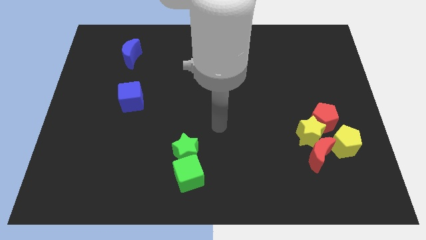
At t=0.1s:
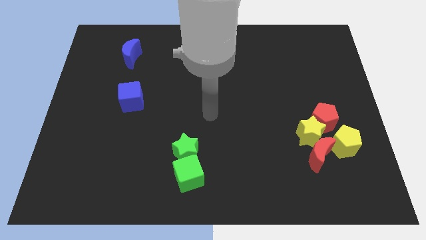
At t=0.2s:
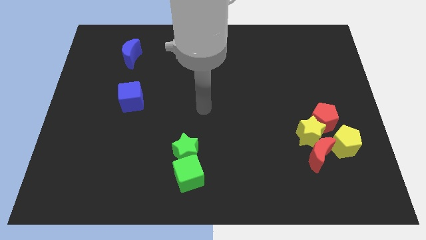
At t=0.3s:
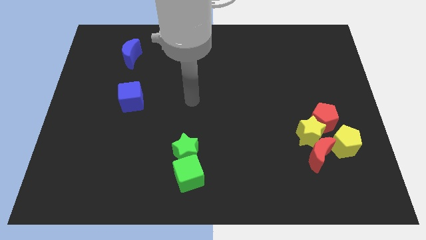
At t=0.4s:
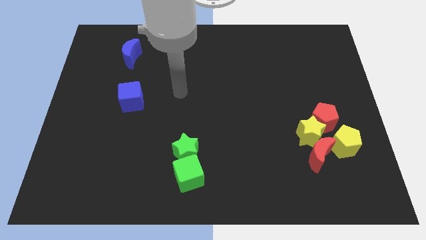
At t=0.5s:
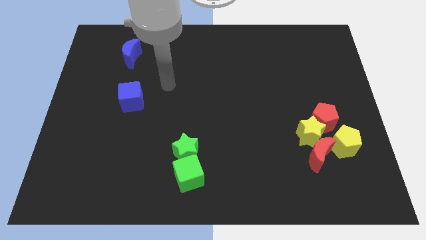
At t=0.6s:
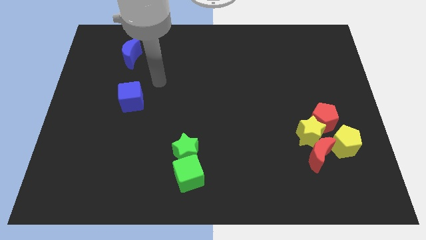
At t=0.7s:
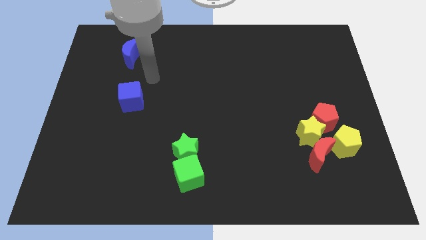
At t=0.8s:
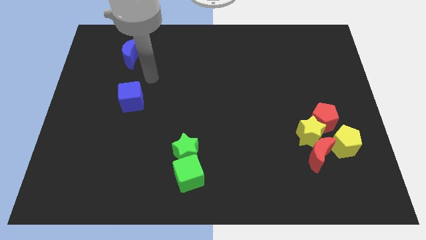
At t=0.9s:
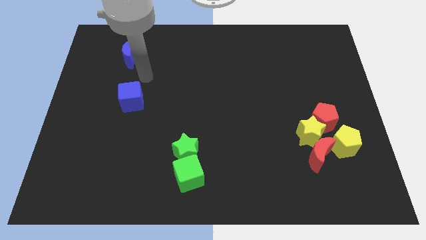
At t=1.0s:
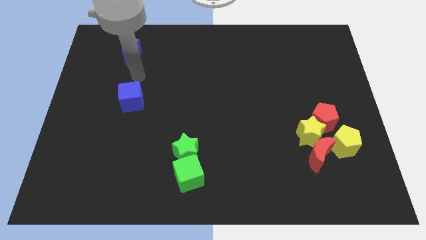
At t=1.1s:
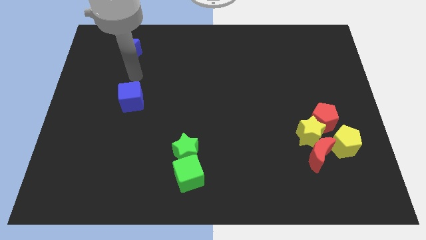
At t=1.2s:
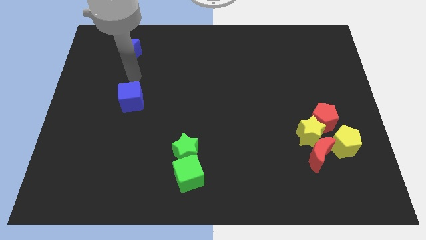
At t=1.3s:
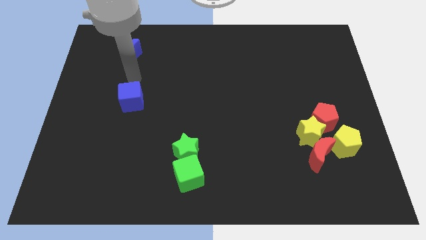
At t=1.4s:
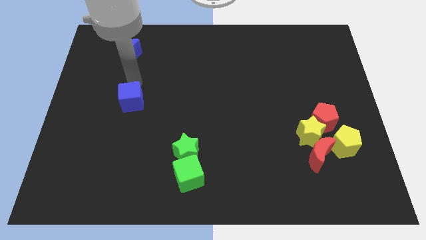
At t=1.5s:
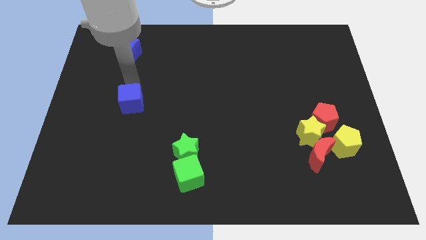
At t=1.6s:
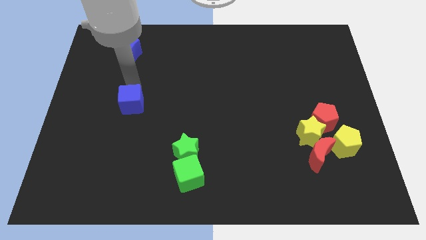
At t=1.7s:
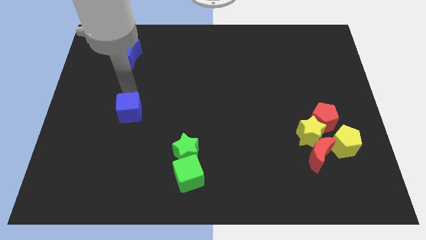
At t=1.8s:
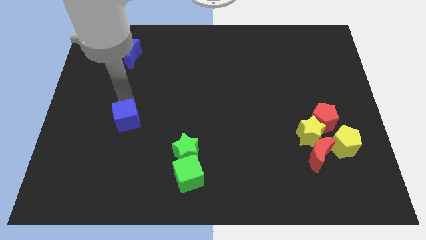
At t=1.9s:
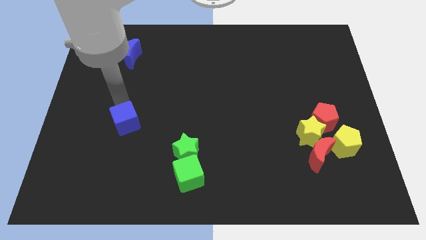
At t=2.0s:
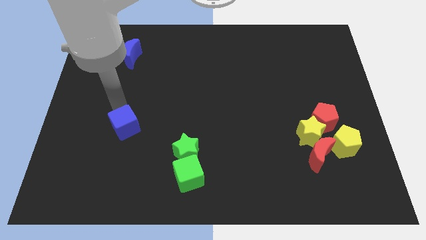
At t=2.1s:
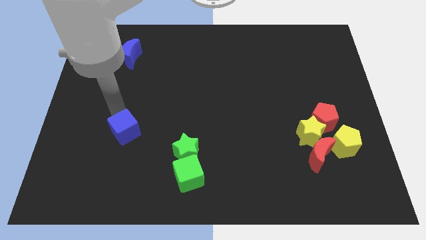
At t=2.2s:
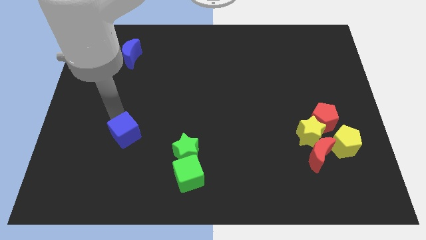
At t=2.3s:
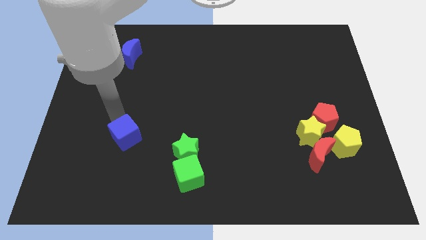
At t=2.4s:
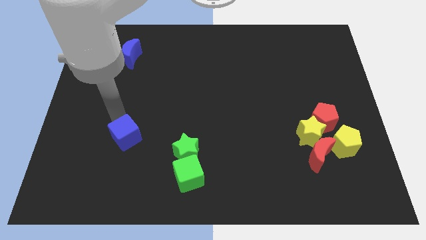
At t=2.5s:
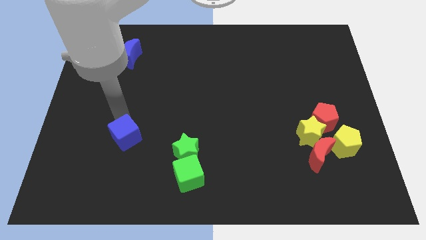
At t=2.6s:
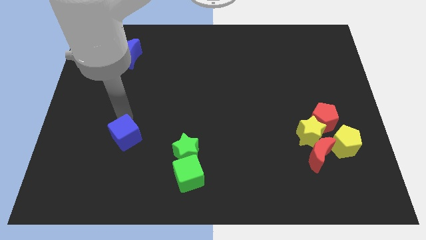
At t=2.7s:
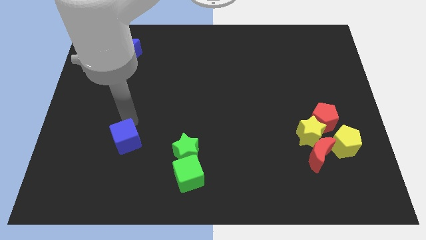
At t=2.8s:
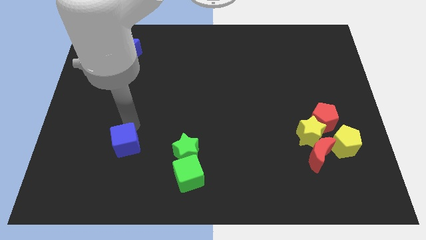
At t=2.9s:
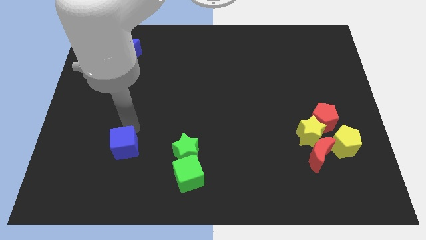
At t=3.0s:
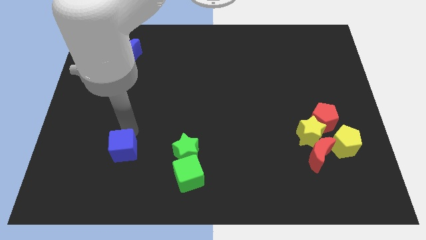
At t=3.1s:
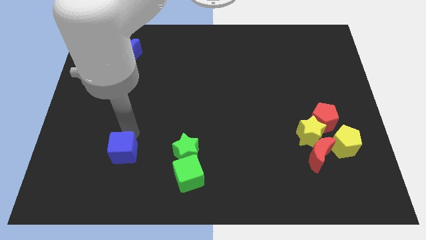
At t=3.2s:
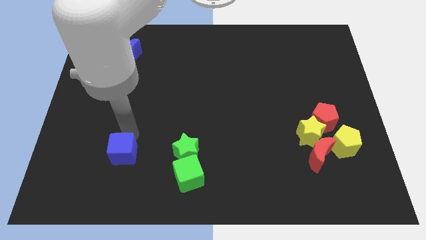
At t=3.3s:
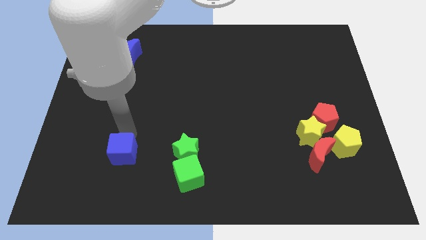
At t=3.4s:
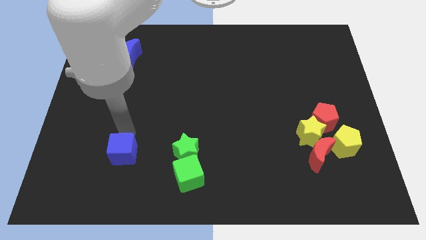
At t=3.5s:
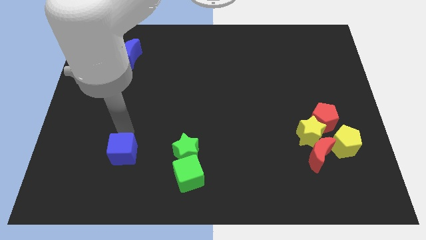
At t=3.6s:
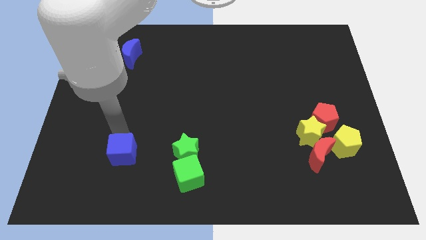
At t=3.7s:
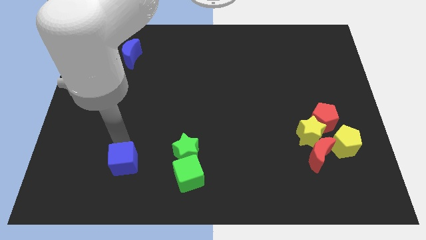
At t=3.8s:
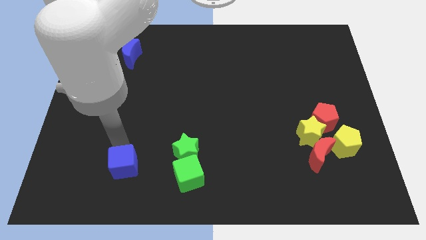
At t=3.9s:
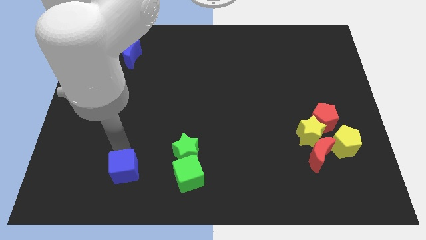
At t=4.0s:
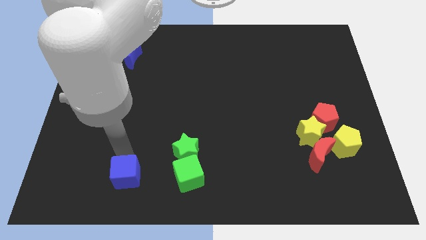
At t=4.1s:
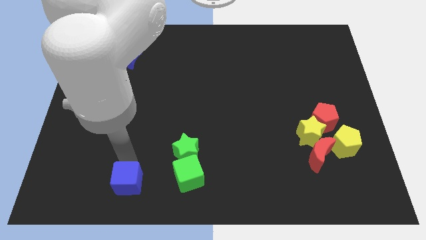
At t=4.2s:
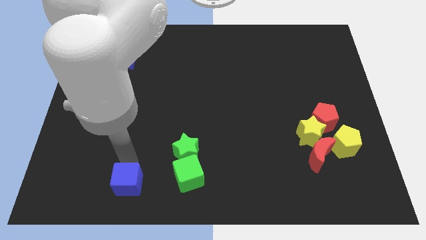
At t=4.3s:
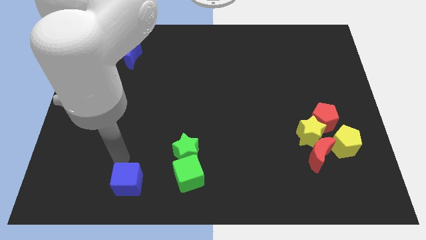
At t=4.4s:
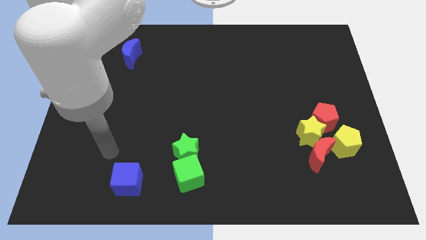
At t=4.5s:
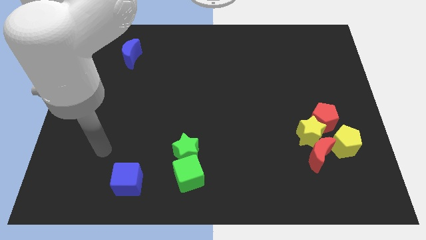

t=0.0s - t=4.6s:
push the blue cube left to the green cube

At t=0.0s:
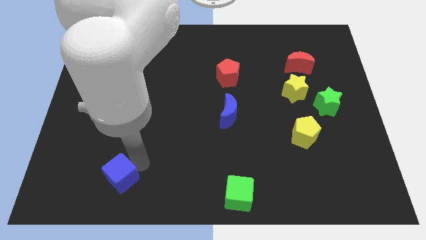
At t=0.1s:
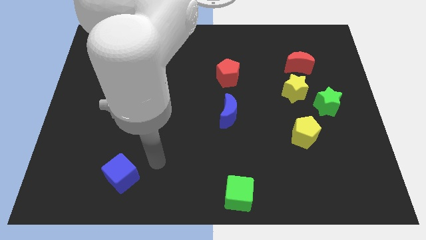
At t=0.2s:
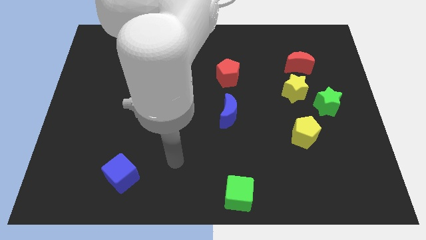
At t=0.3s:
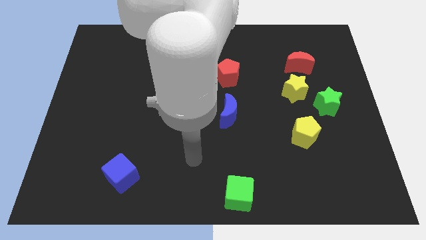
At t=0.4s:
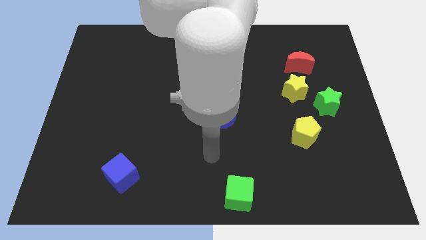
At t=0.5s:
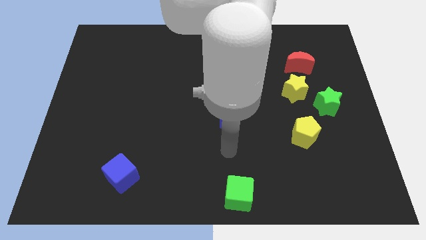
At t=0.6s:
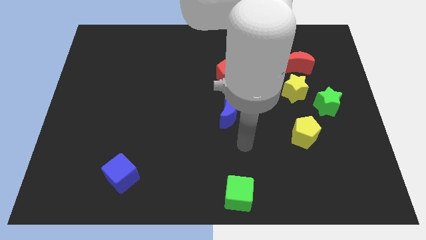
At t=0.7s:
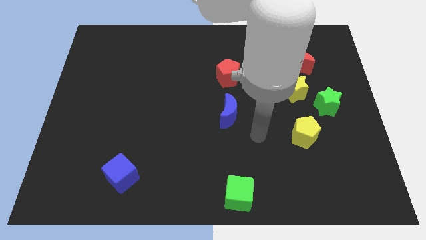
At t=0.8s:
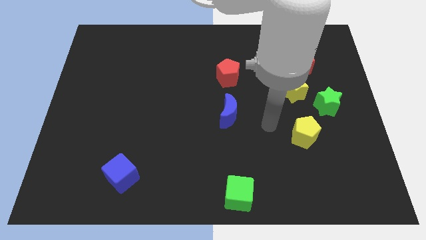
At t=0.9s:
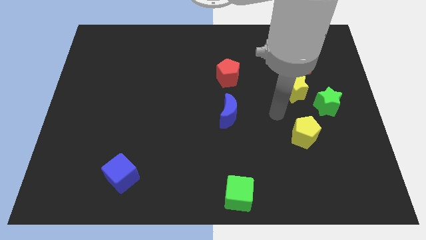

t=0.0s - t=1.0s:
move your arm away from blue cube

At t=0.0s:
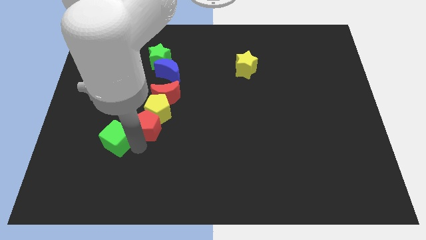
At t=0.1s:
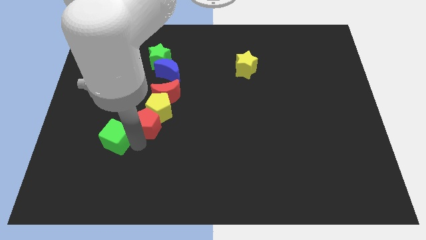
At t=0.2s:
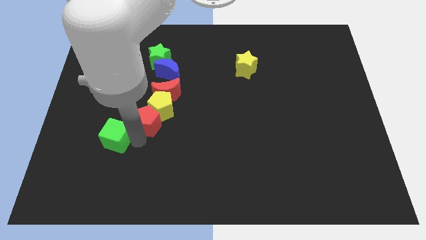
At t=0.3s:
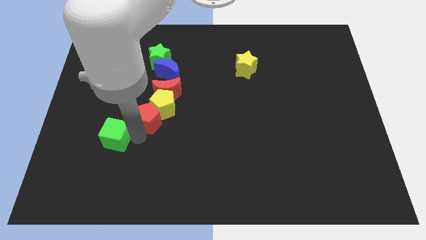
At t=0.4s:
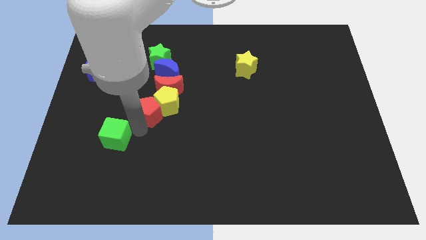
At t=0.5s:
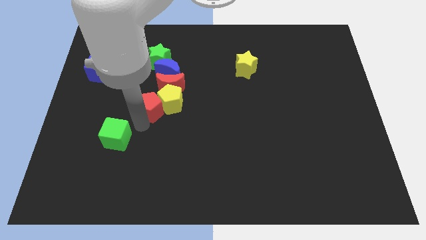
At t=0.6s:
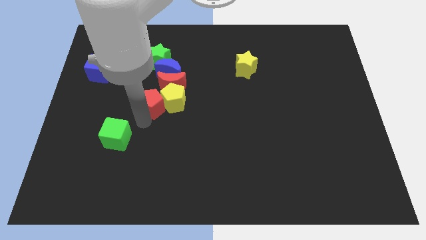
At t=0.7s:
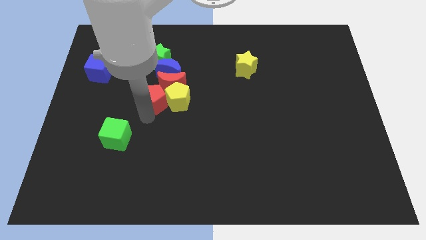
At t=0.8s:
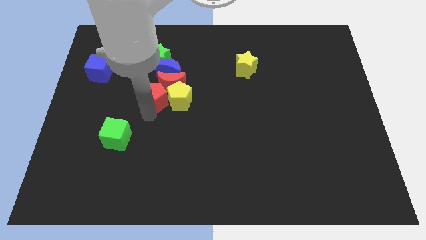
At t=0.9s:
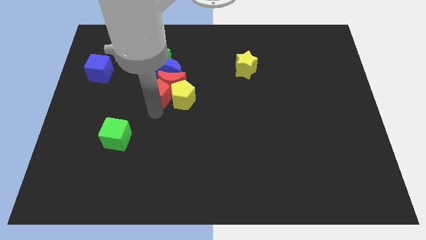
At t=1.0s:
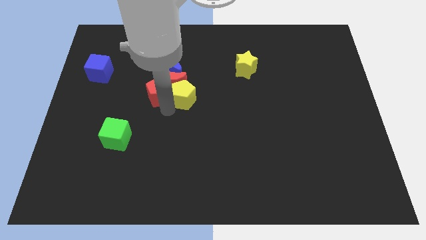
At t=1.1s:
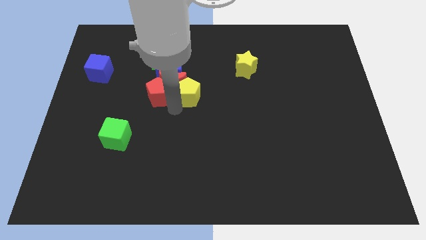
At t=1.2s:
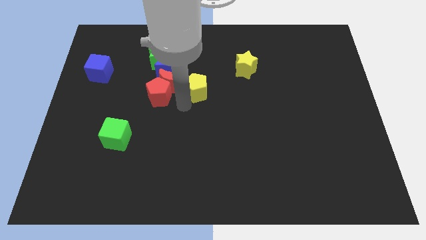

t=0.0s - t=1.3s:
push the red pentagon to the left of the yellow pentagon

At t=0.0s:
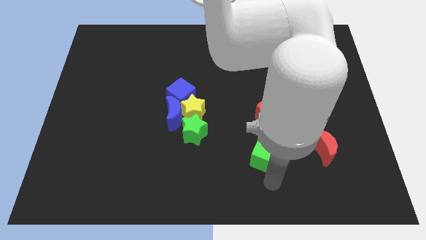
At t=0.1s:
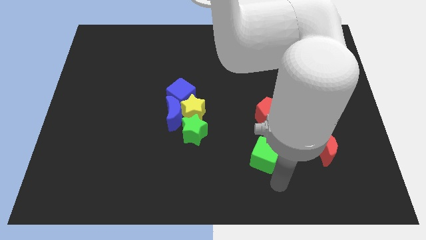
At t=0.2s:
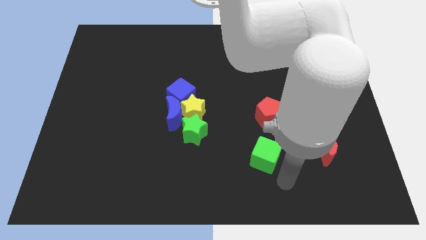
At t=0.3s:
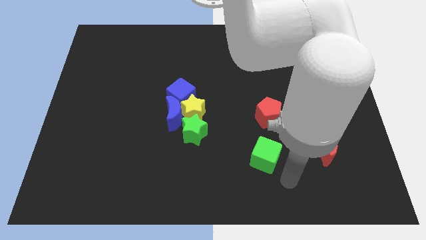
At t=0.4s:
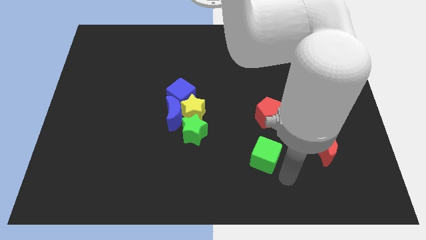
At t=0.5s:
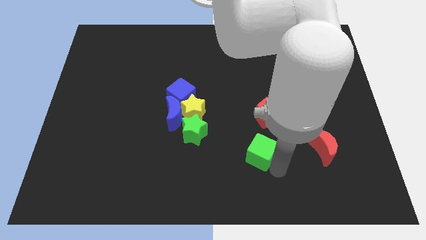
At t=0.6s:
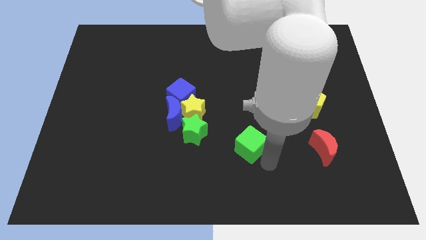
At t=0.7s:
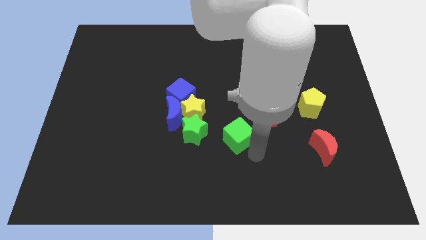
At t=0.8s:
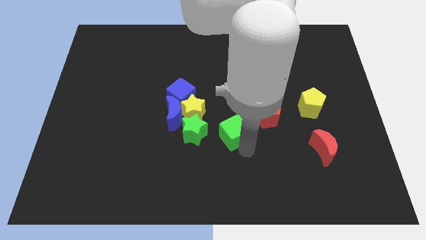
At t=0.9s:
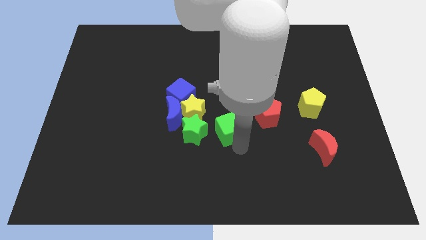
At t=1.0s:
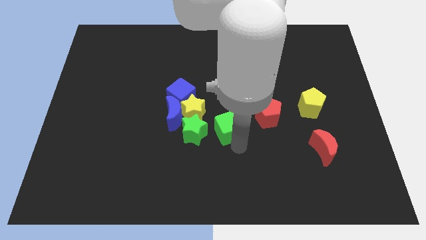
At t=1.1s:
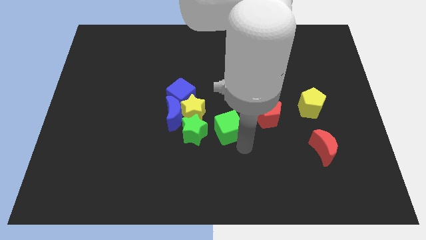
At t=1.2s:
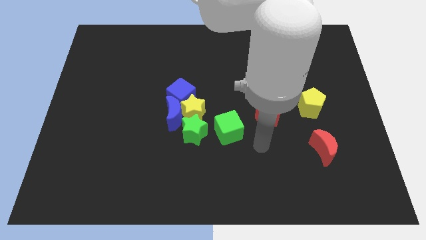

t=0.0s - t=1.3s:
move green cube to the right of green star

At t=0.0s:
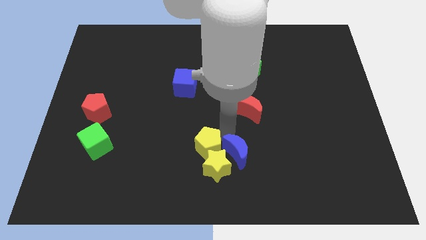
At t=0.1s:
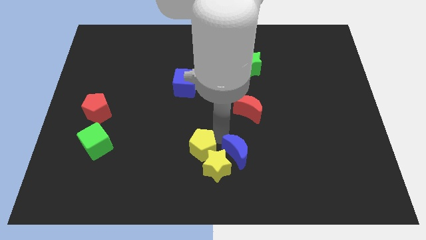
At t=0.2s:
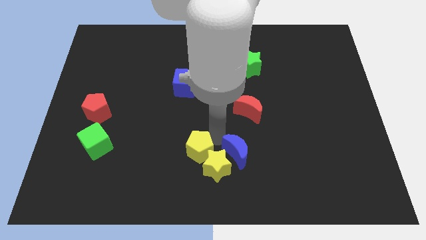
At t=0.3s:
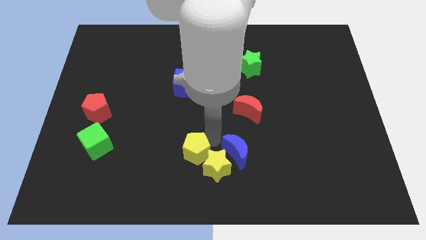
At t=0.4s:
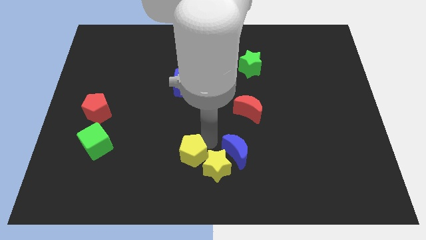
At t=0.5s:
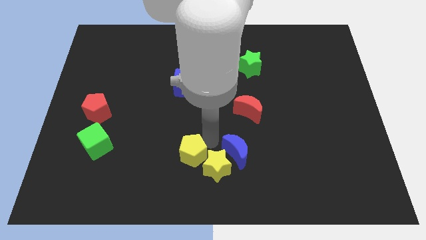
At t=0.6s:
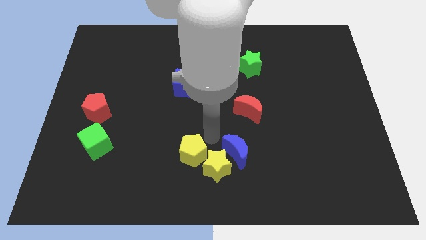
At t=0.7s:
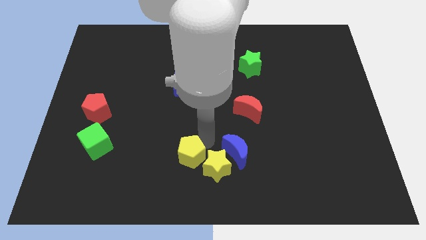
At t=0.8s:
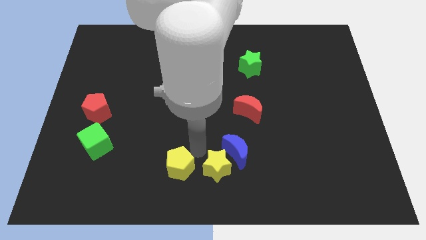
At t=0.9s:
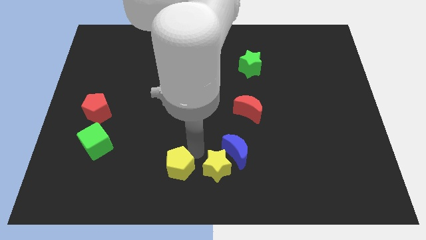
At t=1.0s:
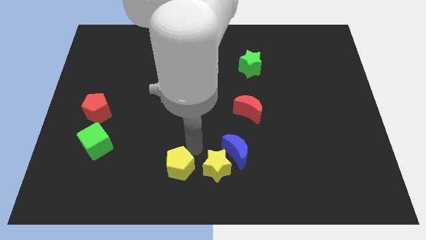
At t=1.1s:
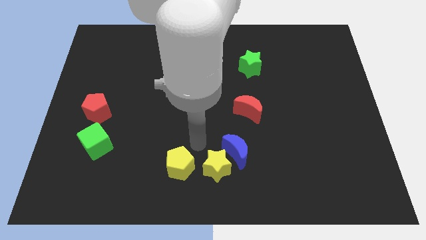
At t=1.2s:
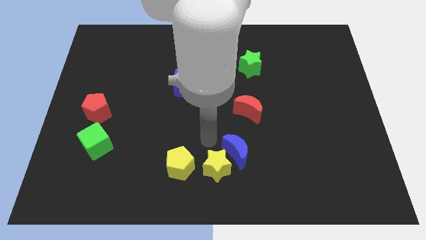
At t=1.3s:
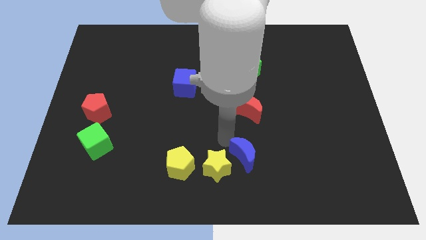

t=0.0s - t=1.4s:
place the yellow pentagon at the left side of the yellow star
